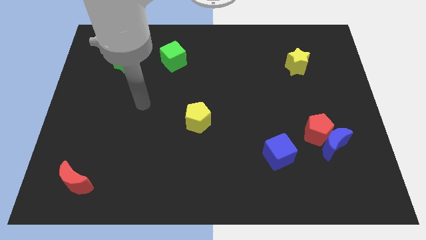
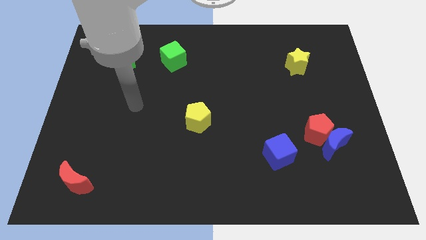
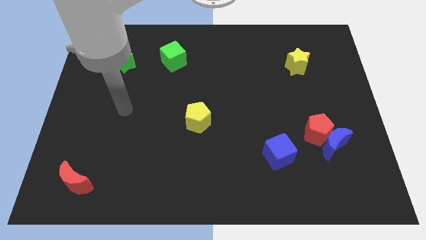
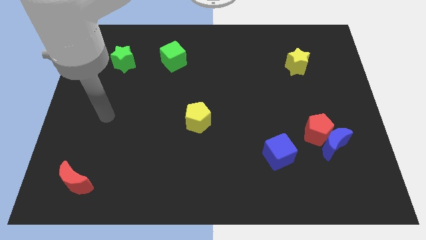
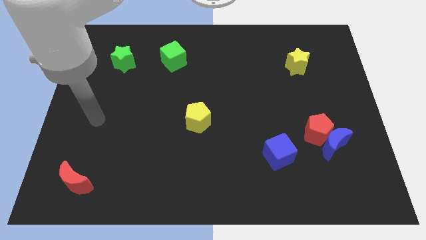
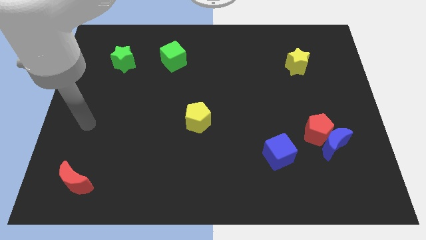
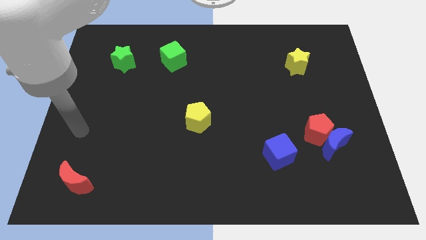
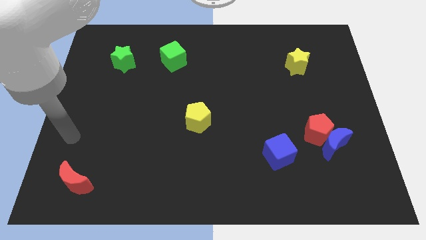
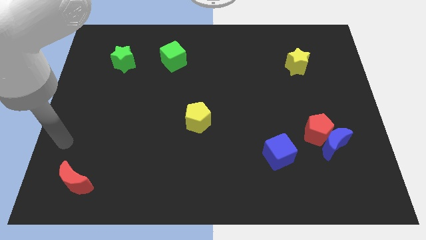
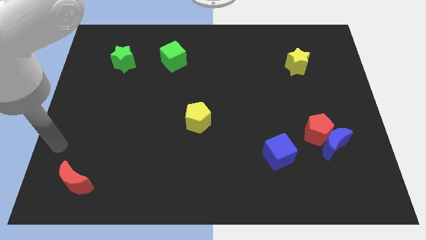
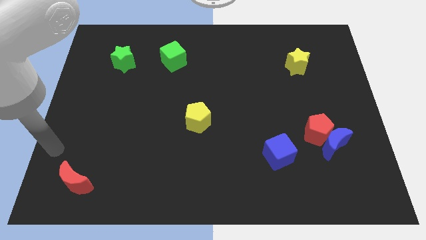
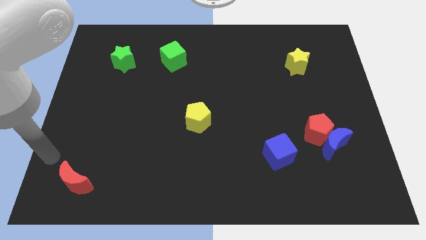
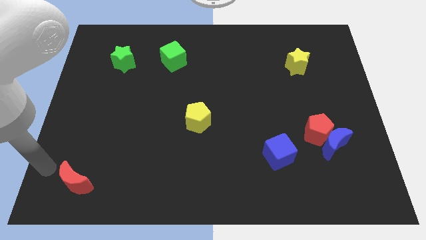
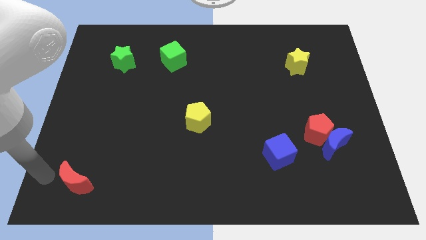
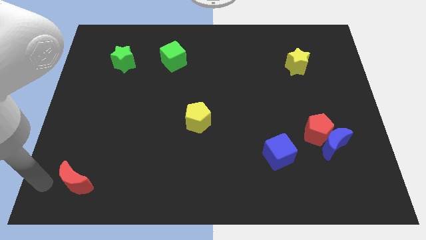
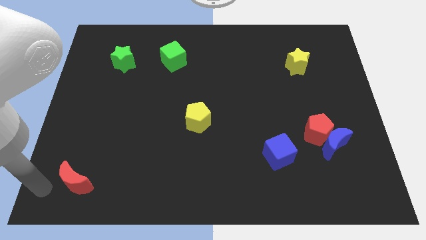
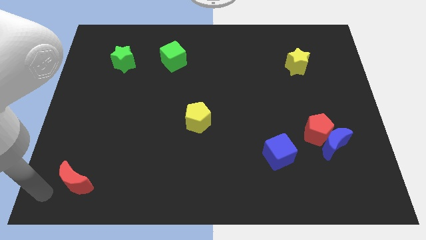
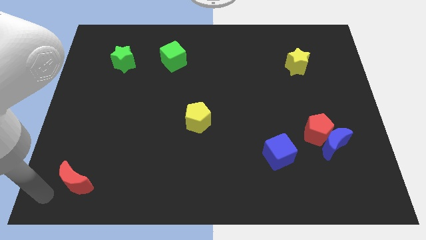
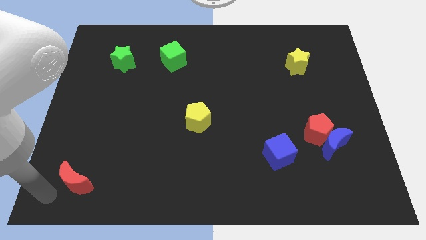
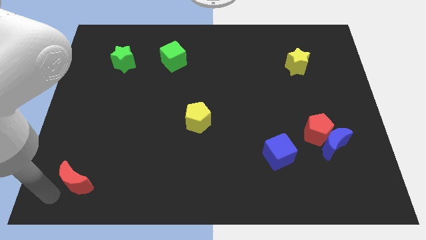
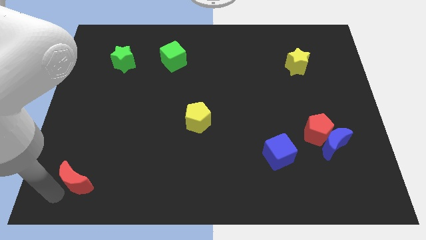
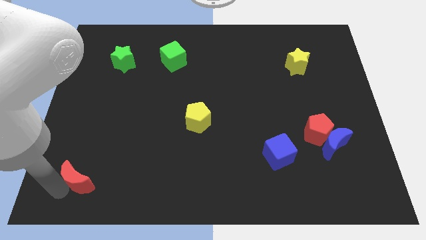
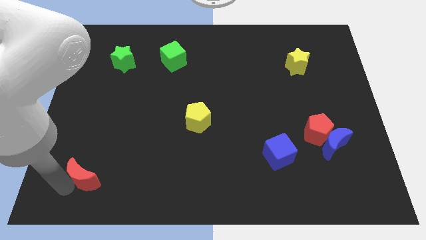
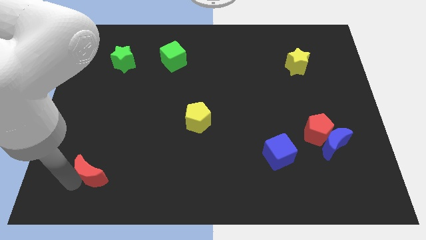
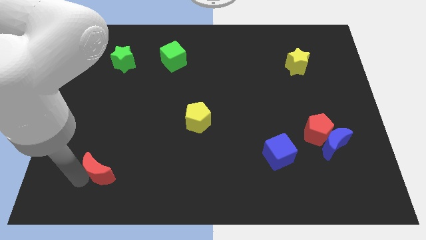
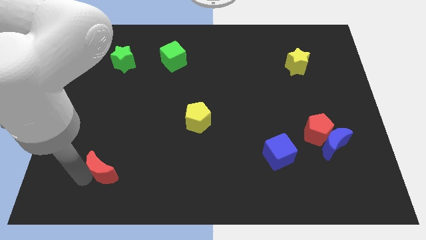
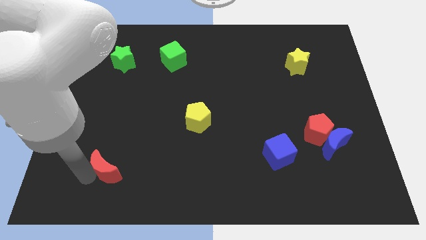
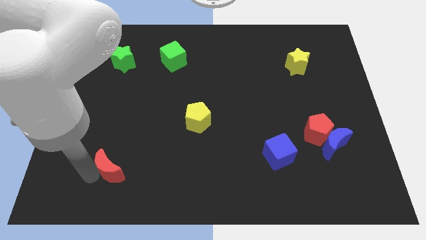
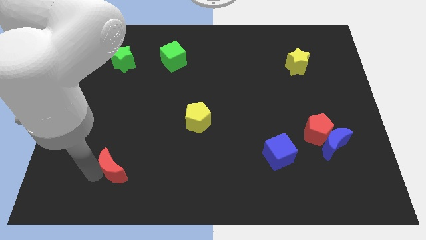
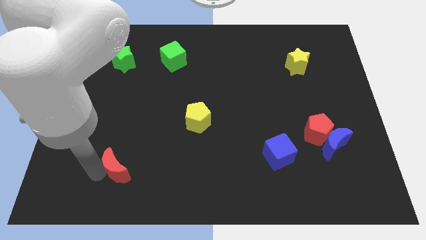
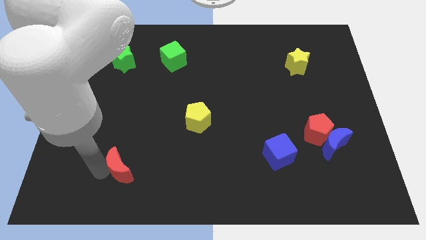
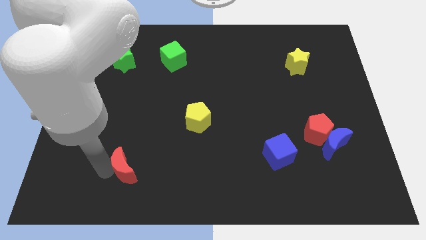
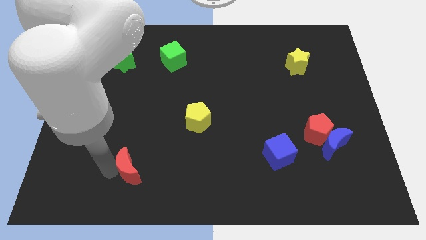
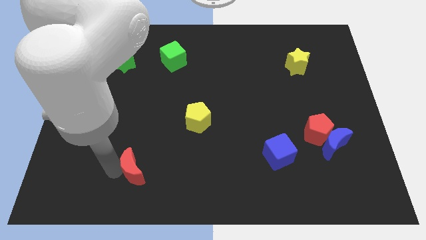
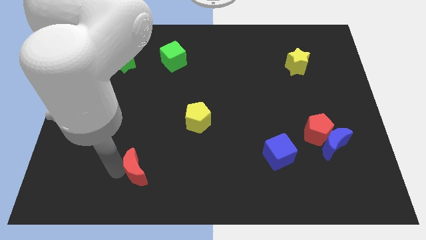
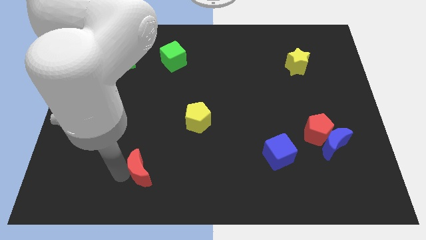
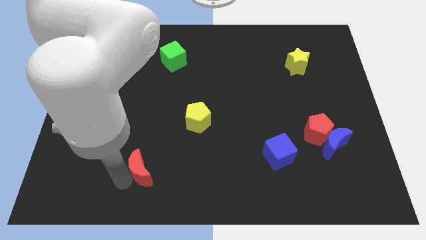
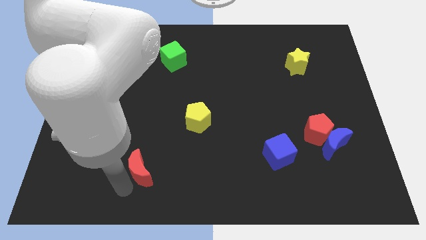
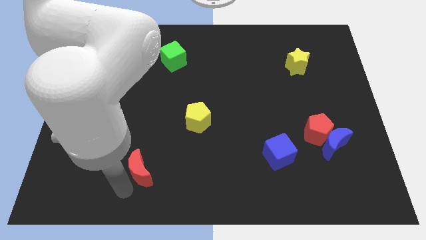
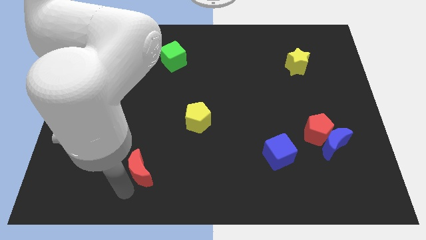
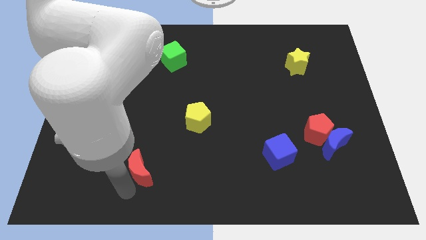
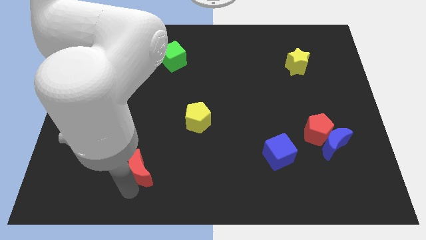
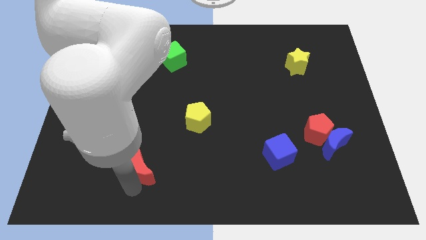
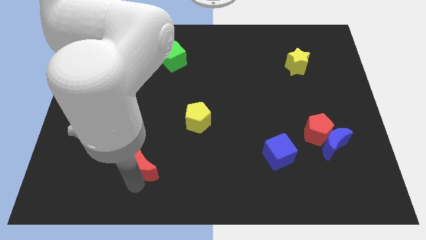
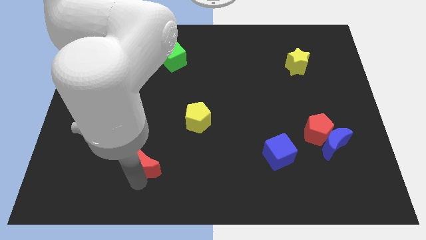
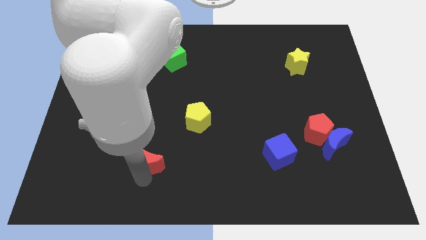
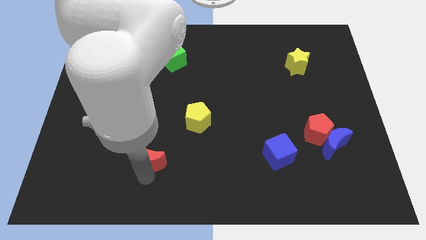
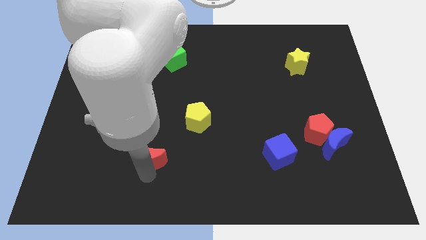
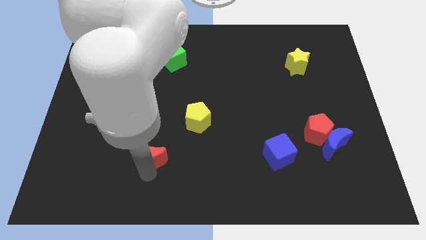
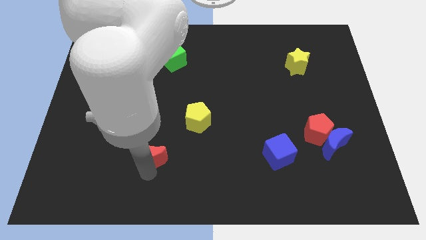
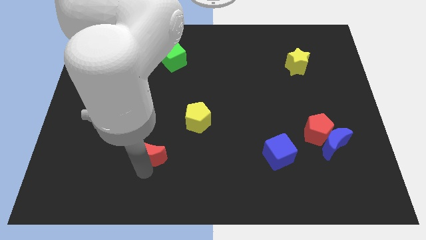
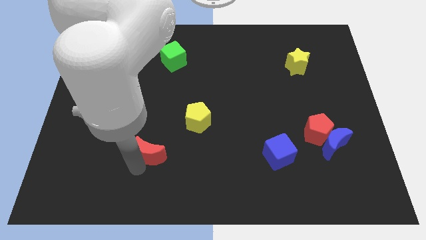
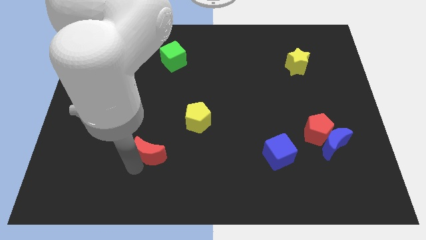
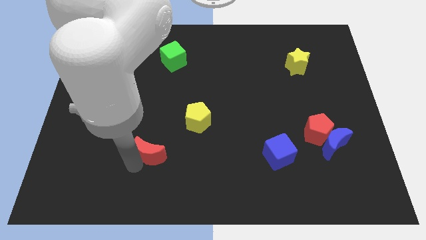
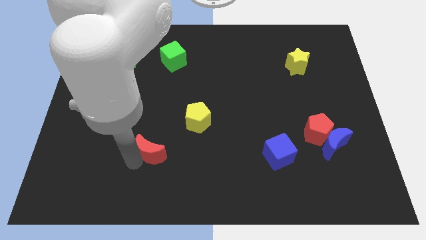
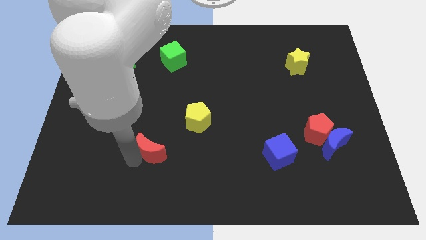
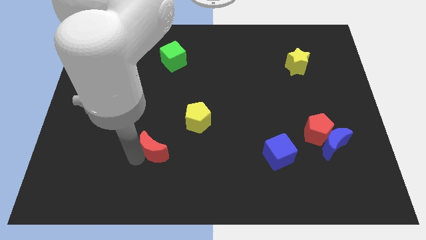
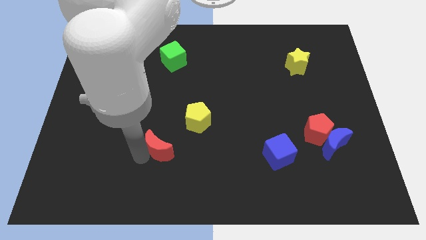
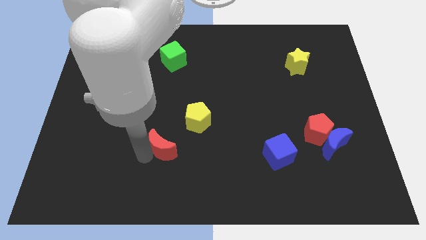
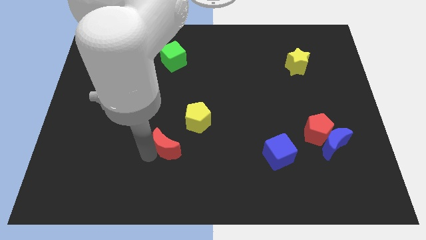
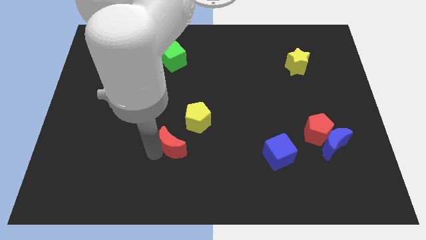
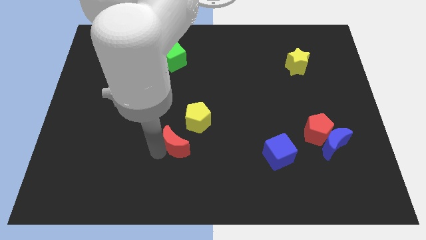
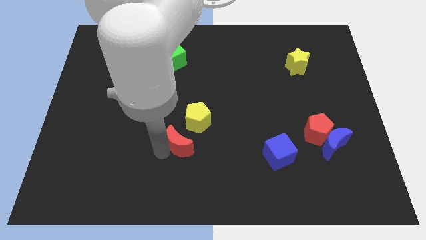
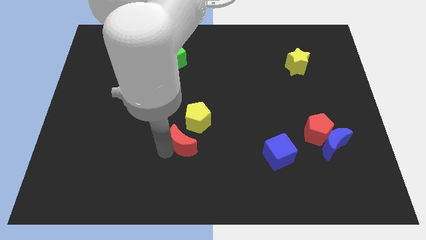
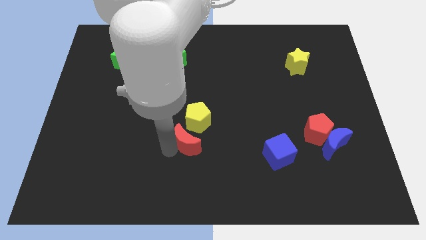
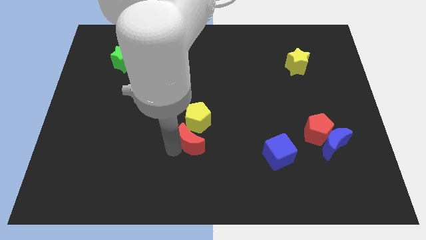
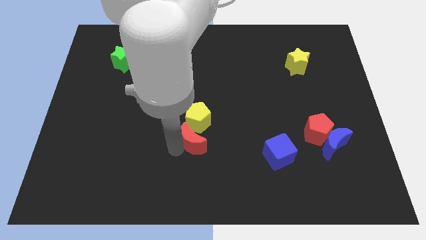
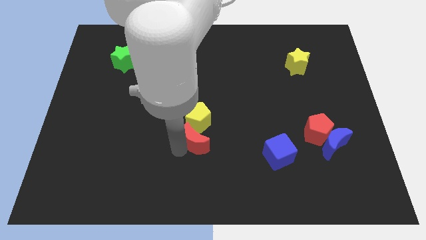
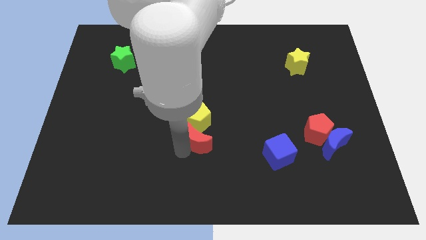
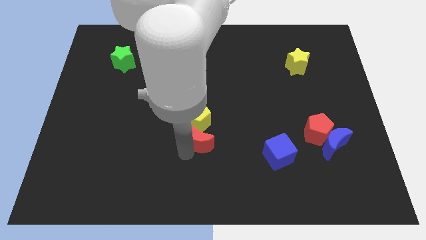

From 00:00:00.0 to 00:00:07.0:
slide the red moon towards the yellow pentagon

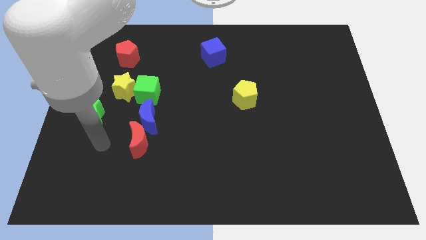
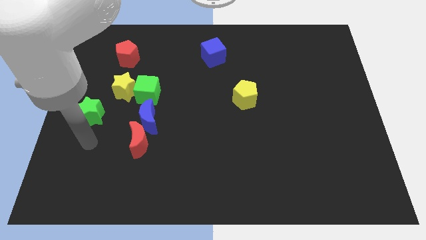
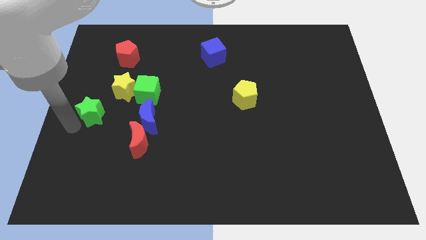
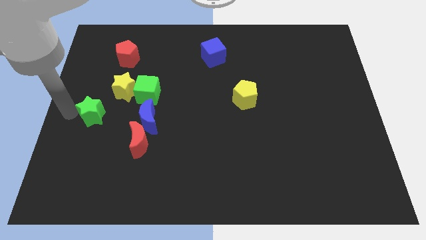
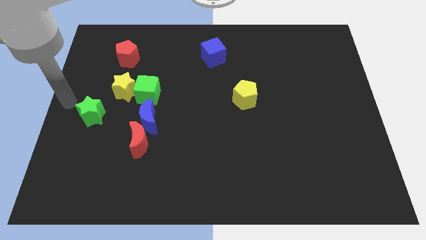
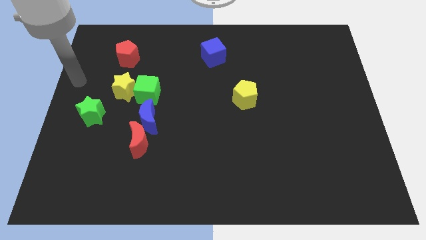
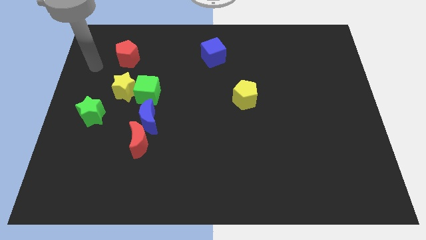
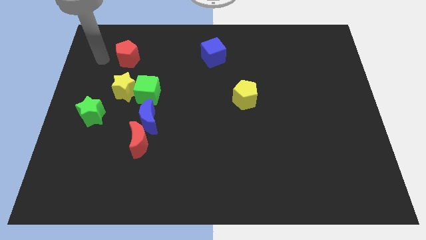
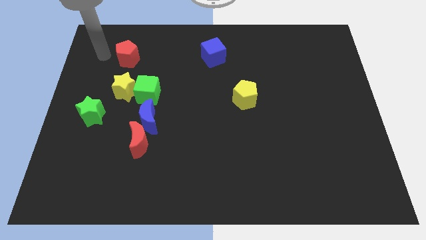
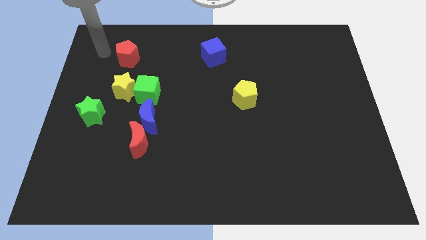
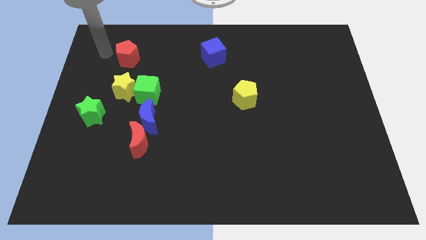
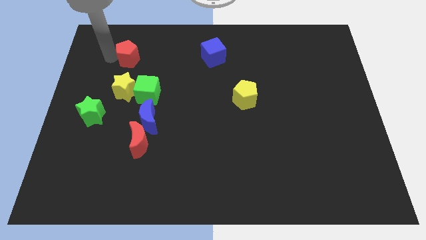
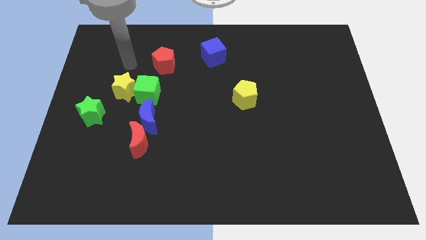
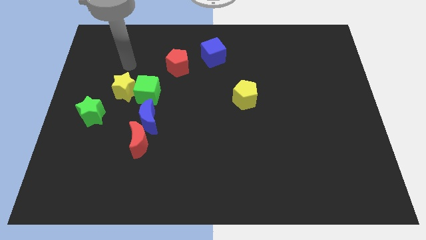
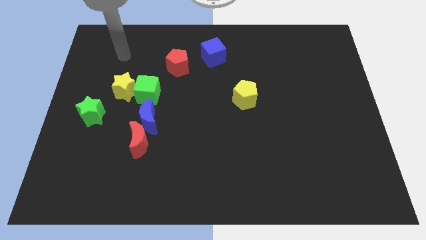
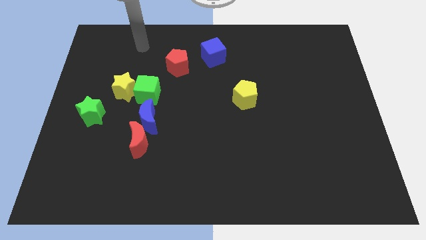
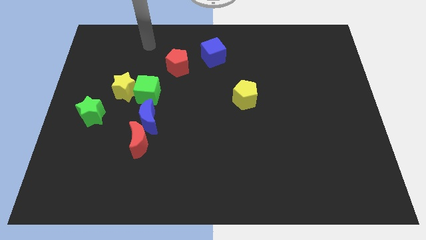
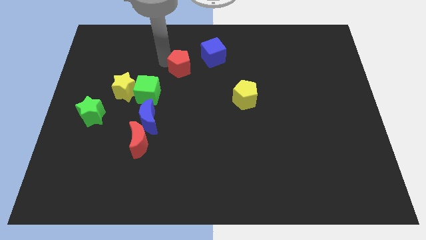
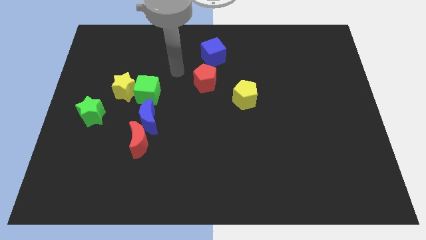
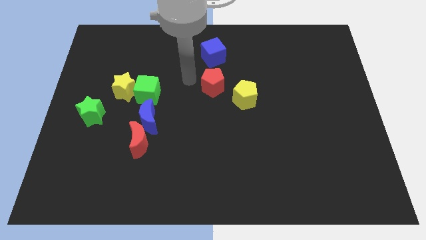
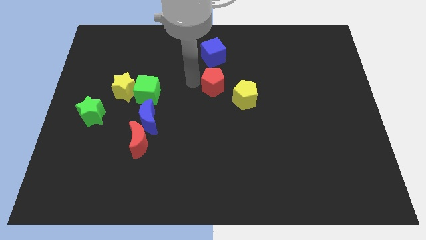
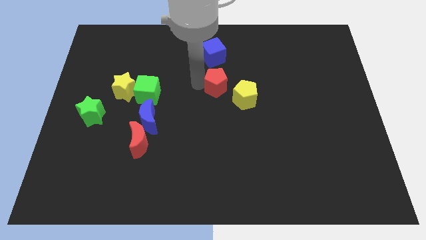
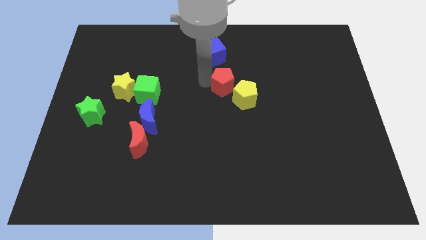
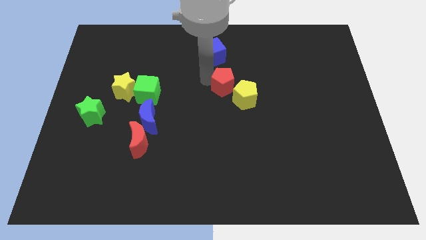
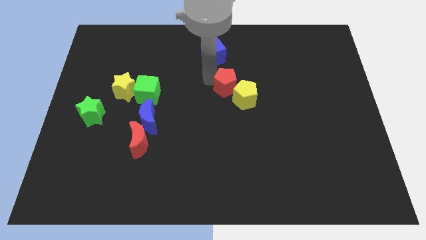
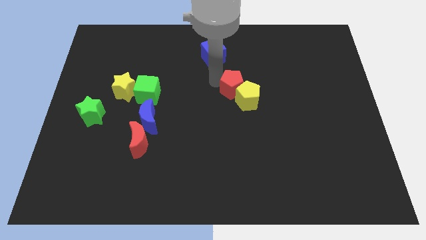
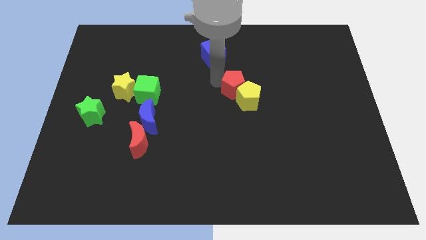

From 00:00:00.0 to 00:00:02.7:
push the red pentagon close to the yellow pentagon
